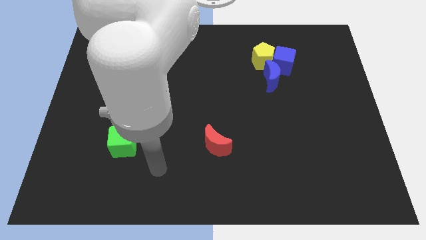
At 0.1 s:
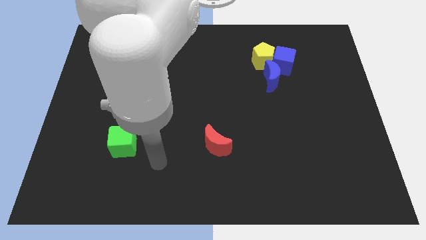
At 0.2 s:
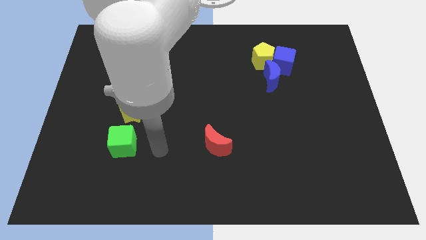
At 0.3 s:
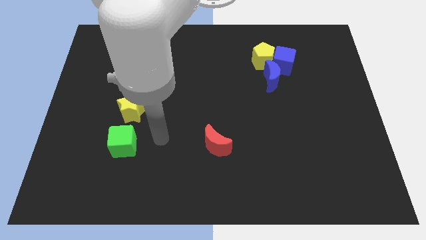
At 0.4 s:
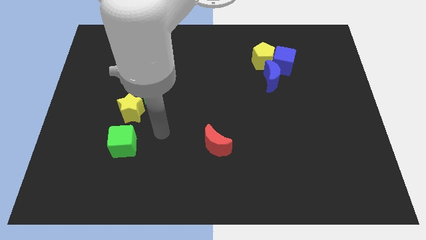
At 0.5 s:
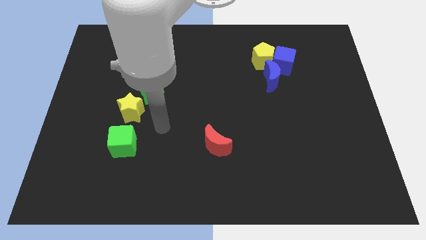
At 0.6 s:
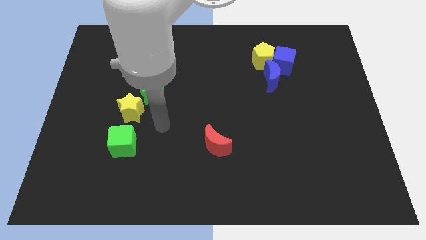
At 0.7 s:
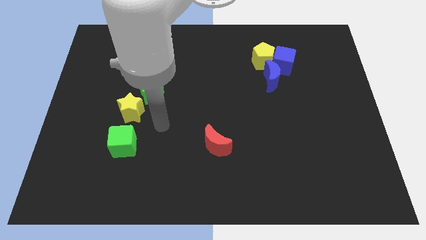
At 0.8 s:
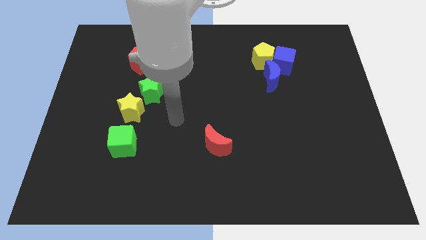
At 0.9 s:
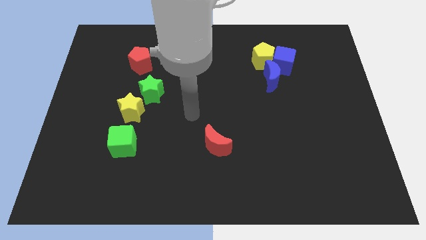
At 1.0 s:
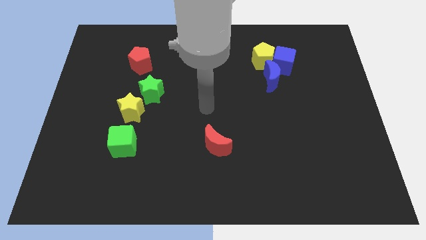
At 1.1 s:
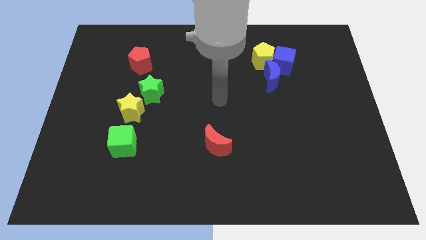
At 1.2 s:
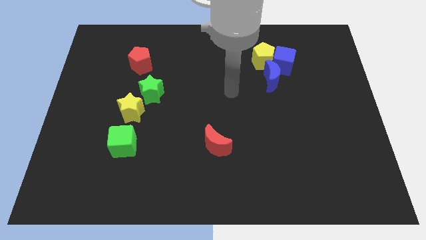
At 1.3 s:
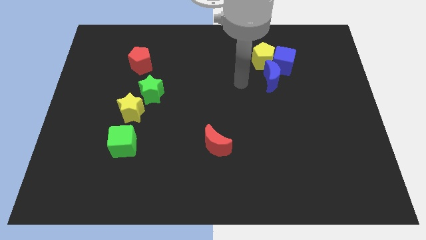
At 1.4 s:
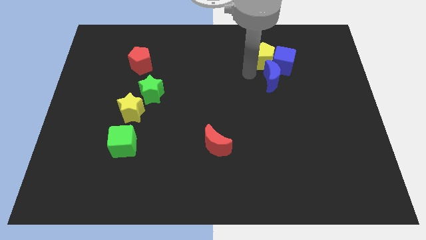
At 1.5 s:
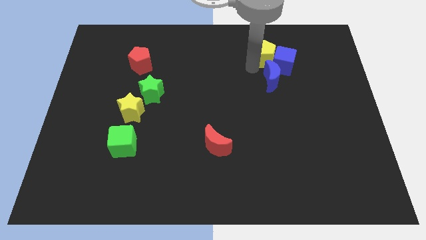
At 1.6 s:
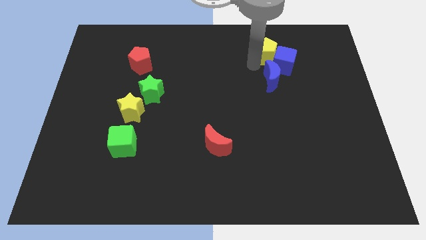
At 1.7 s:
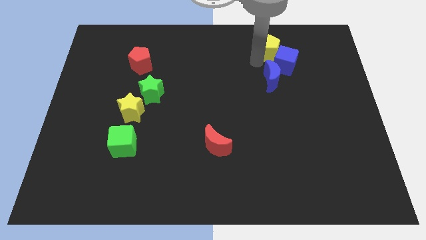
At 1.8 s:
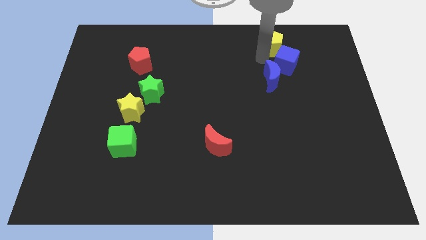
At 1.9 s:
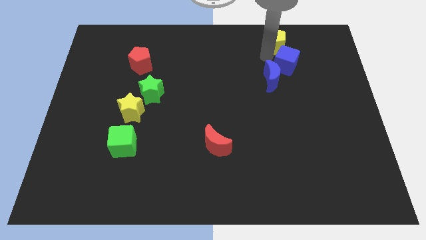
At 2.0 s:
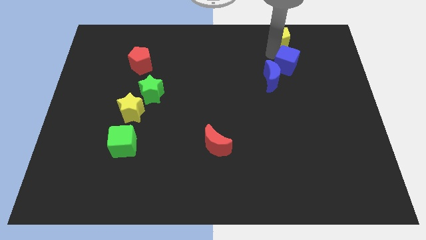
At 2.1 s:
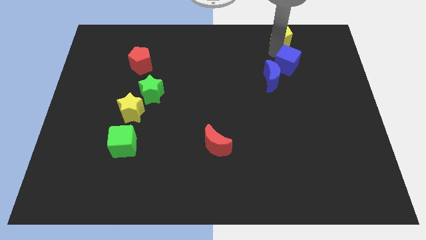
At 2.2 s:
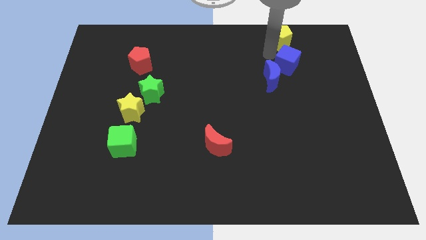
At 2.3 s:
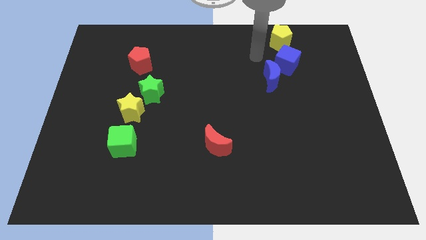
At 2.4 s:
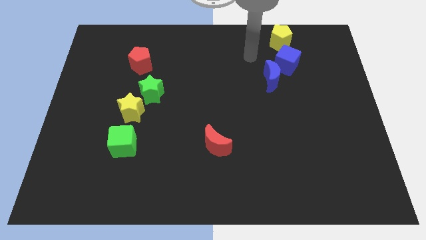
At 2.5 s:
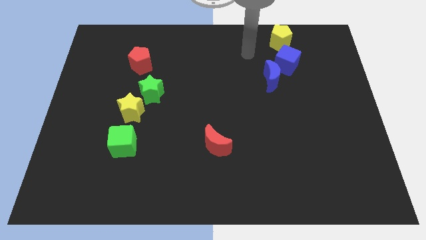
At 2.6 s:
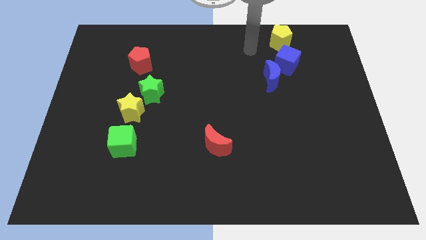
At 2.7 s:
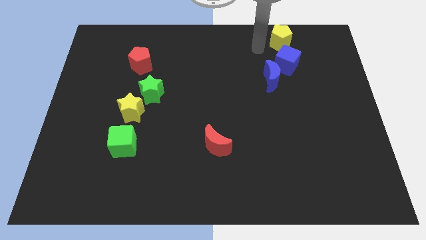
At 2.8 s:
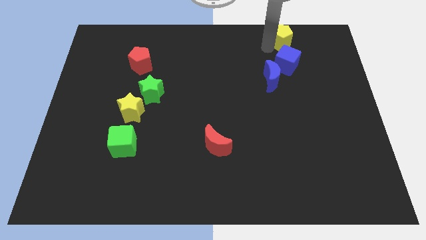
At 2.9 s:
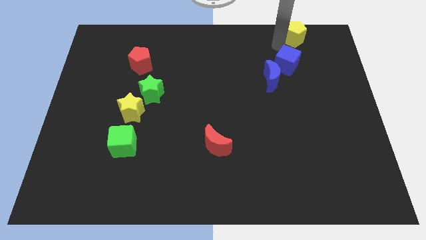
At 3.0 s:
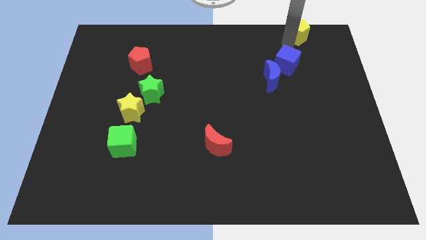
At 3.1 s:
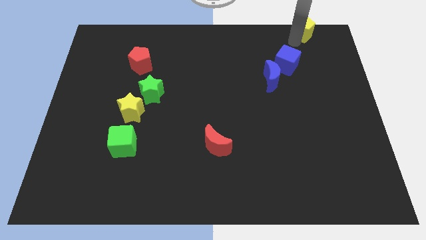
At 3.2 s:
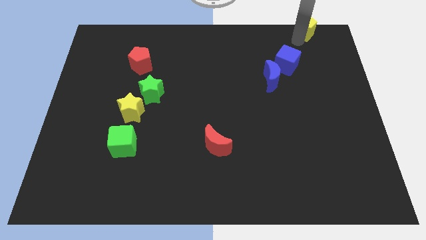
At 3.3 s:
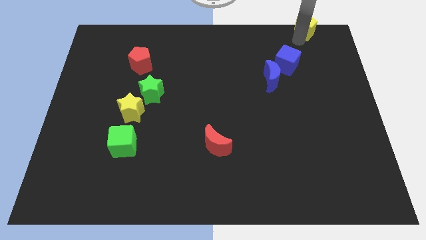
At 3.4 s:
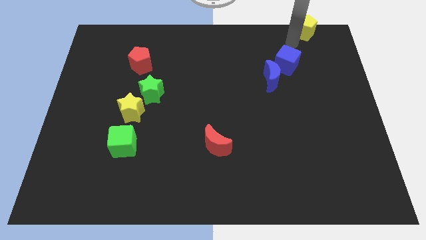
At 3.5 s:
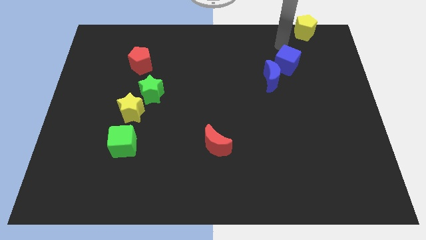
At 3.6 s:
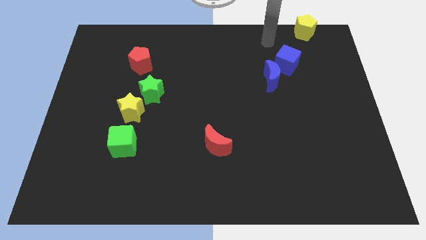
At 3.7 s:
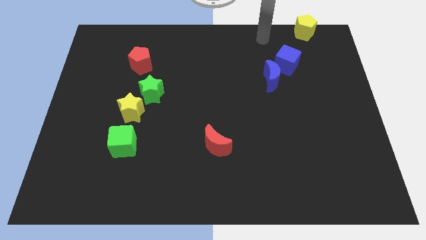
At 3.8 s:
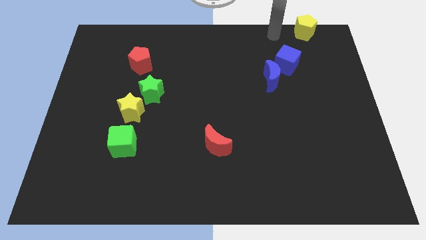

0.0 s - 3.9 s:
move the yellow pentagon to top right

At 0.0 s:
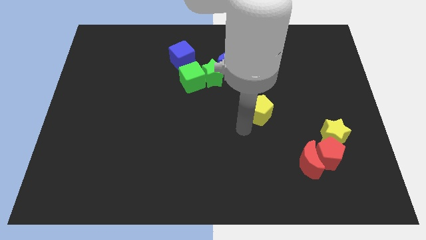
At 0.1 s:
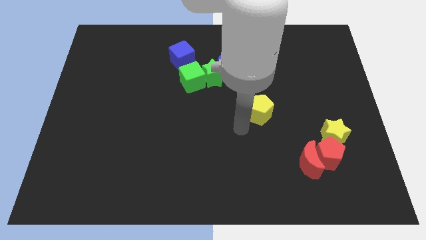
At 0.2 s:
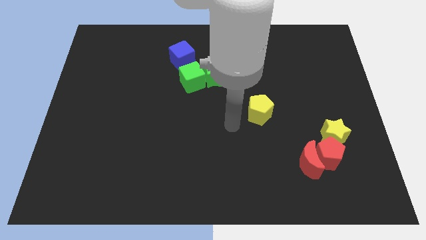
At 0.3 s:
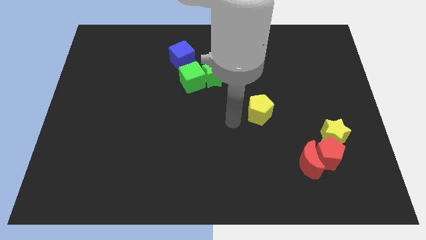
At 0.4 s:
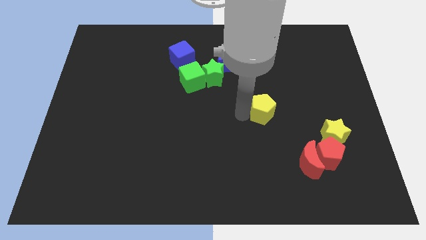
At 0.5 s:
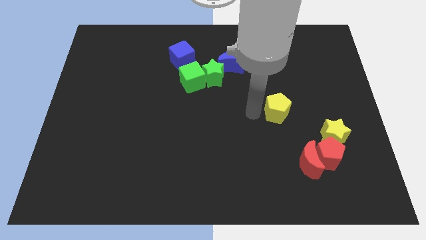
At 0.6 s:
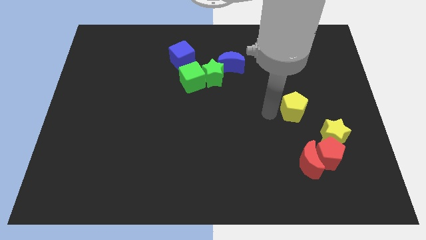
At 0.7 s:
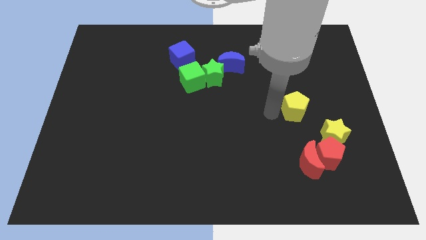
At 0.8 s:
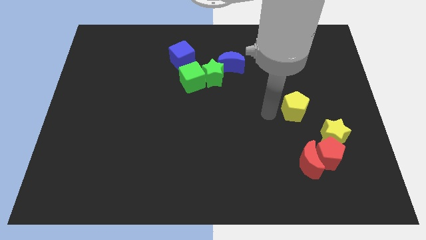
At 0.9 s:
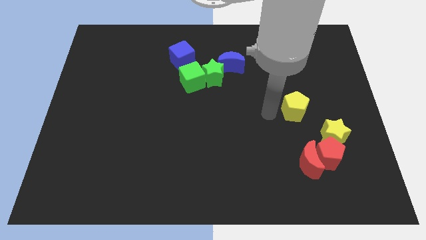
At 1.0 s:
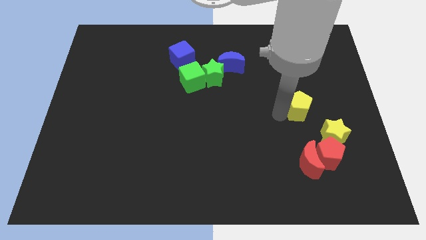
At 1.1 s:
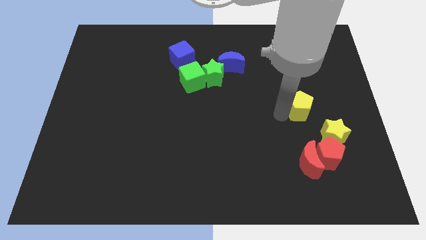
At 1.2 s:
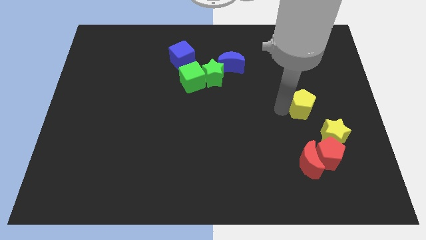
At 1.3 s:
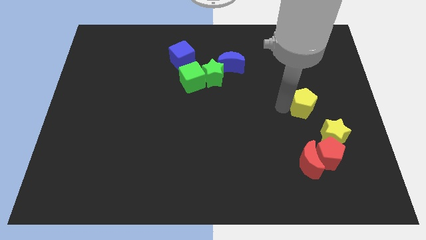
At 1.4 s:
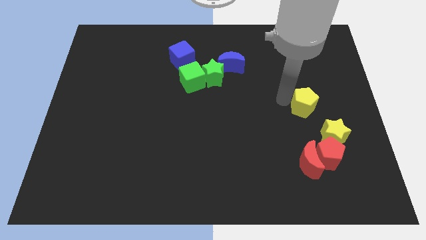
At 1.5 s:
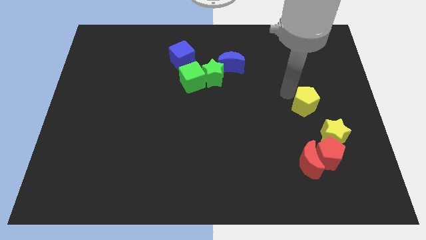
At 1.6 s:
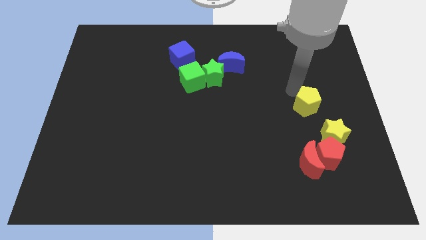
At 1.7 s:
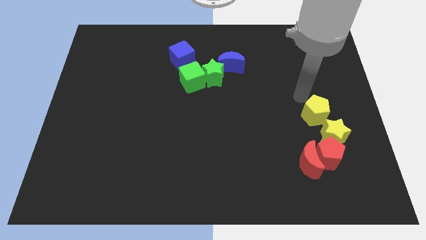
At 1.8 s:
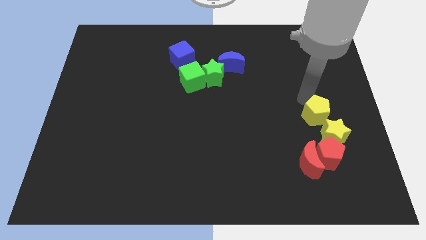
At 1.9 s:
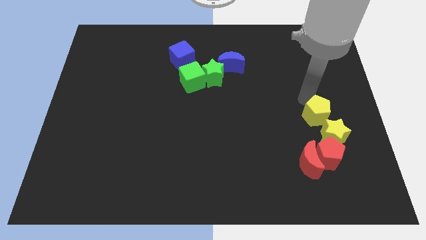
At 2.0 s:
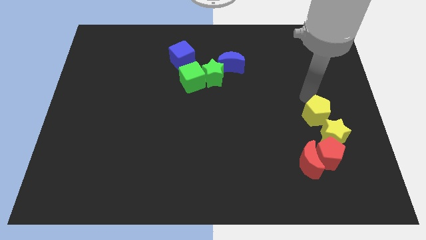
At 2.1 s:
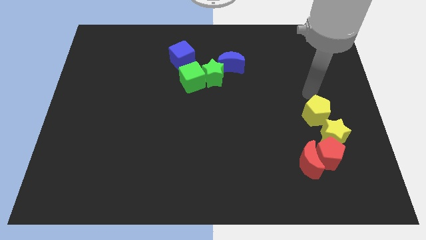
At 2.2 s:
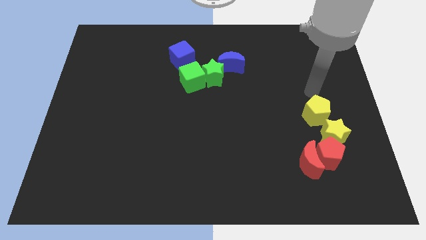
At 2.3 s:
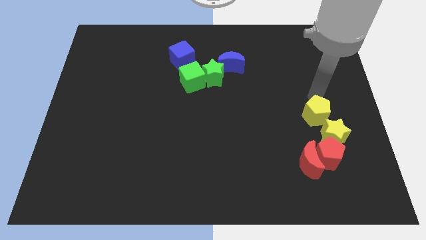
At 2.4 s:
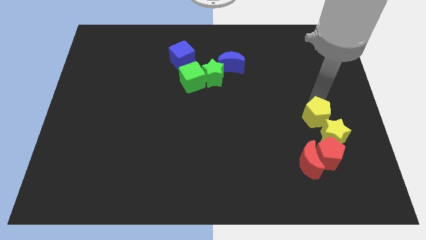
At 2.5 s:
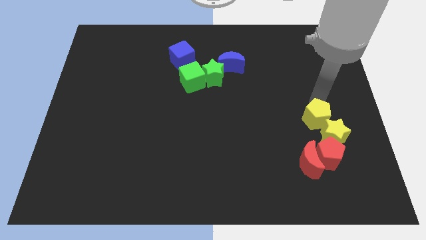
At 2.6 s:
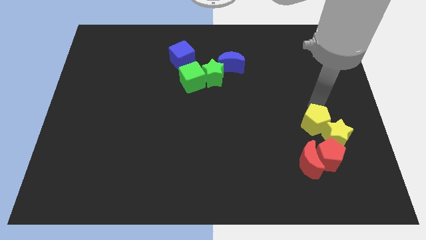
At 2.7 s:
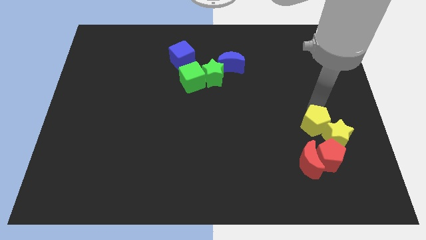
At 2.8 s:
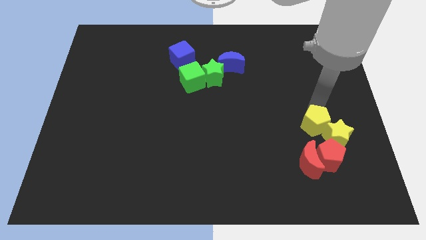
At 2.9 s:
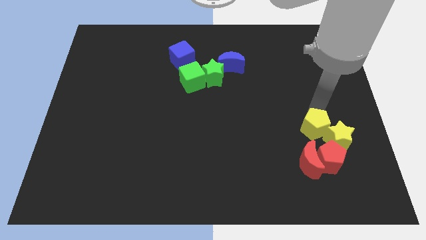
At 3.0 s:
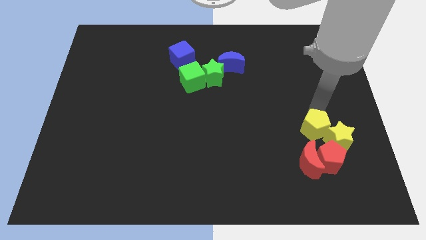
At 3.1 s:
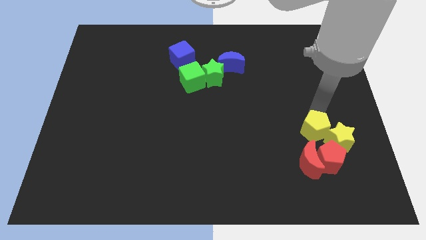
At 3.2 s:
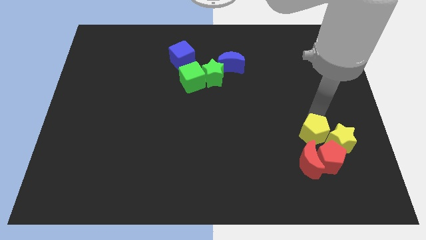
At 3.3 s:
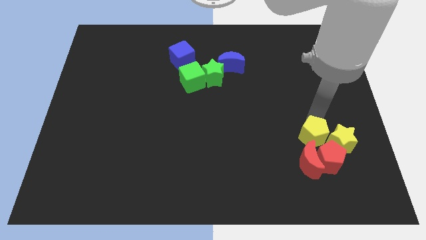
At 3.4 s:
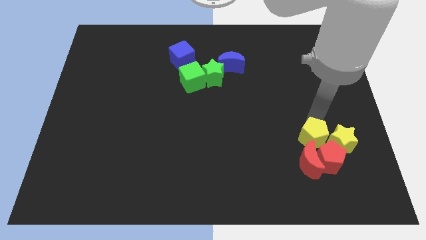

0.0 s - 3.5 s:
push yellow pentagon into the yellow star

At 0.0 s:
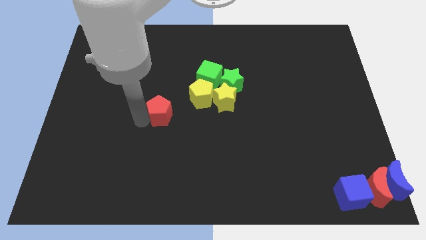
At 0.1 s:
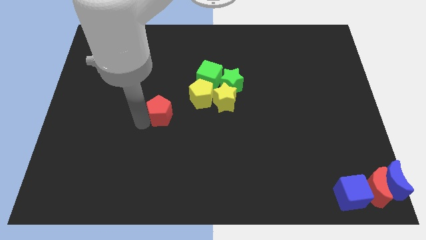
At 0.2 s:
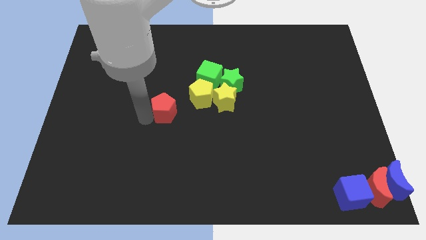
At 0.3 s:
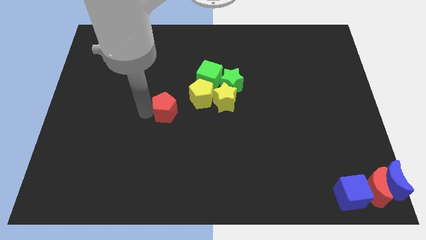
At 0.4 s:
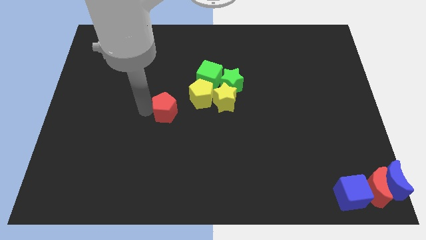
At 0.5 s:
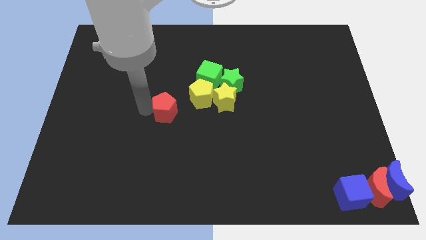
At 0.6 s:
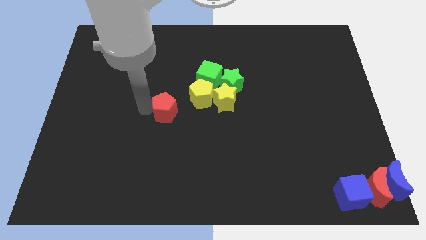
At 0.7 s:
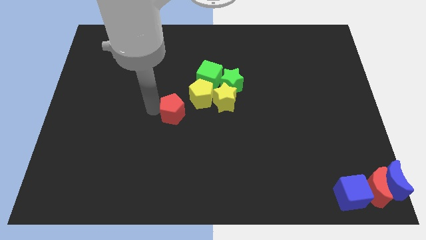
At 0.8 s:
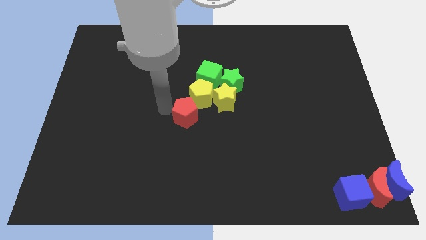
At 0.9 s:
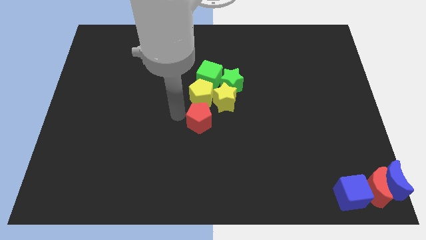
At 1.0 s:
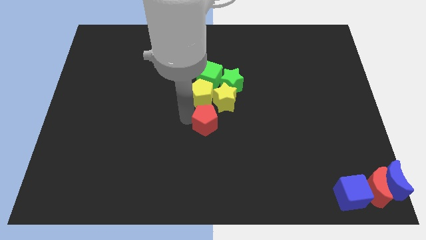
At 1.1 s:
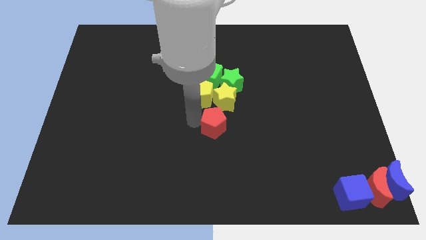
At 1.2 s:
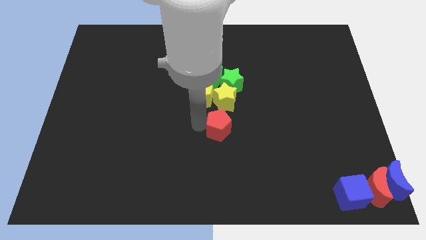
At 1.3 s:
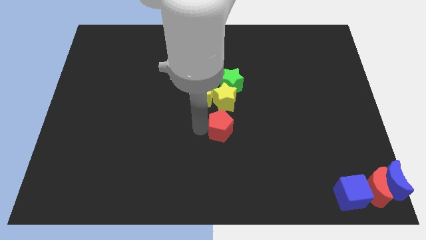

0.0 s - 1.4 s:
place the red pentagon to the bottom of the yellow star

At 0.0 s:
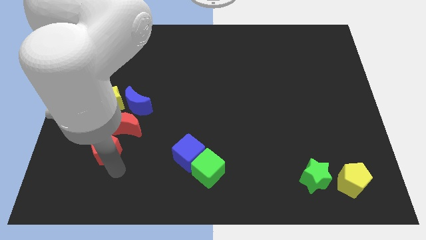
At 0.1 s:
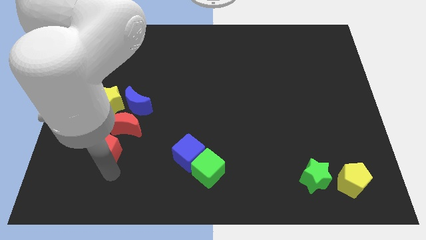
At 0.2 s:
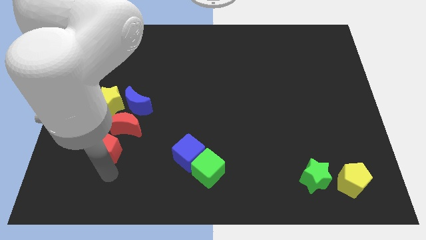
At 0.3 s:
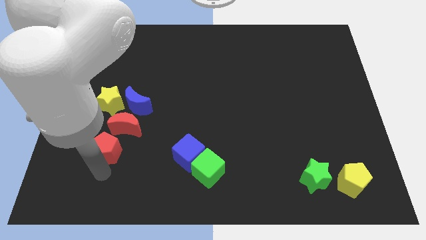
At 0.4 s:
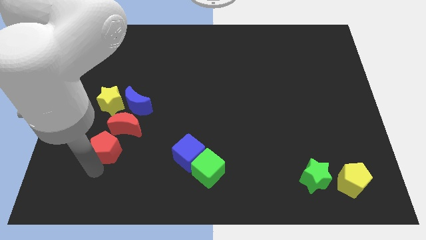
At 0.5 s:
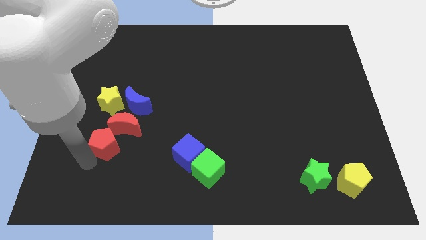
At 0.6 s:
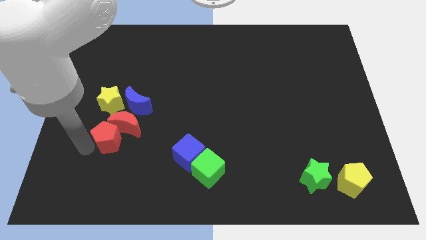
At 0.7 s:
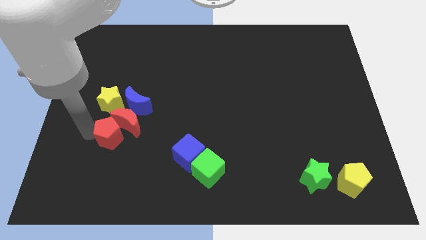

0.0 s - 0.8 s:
push red pentagon in to red moon
